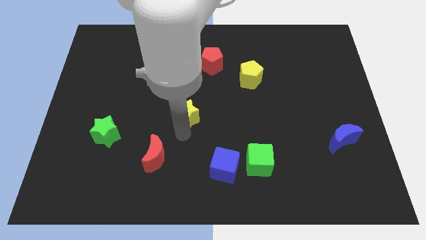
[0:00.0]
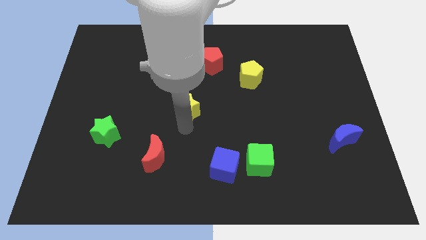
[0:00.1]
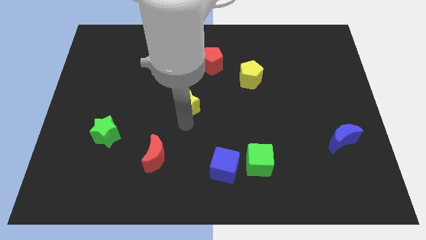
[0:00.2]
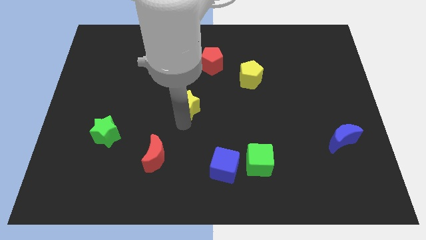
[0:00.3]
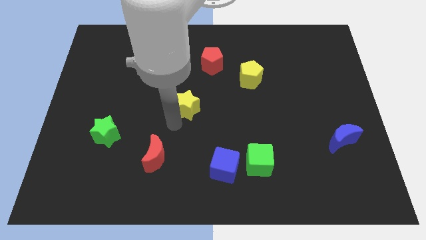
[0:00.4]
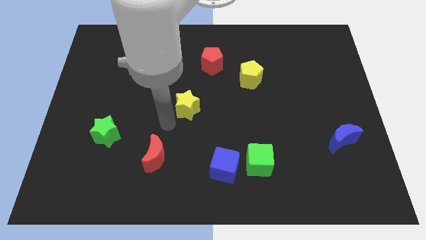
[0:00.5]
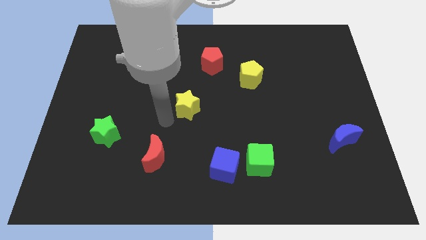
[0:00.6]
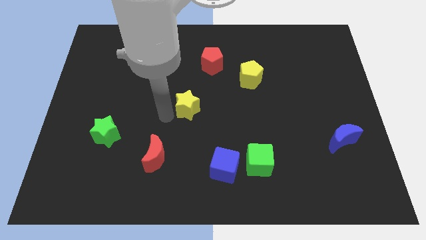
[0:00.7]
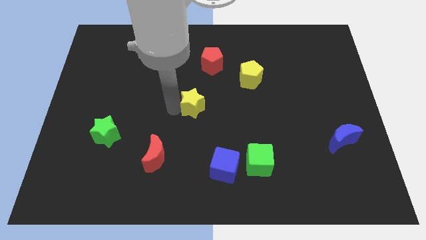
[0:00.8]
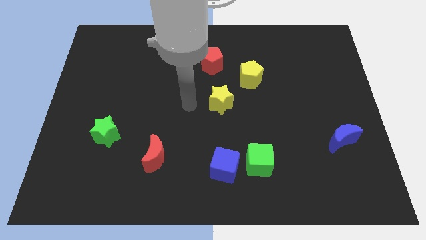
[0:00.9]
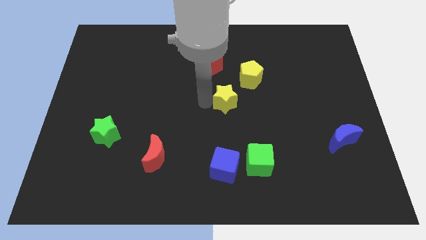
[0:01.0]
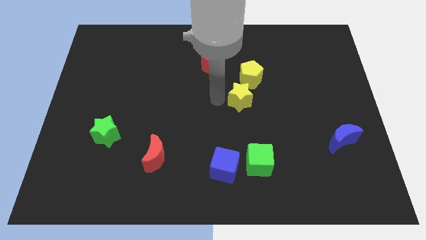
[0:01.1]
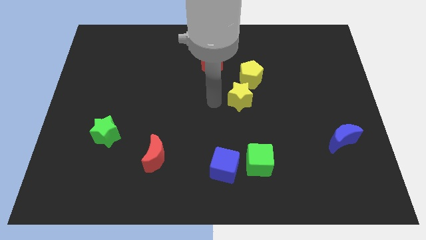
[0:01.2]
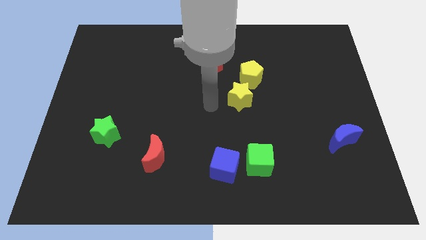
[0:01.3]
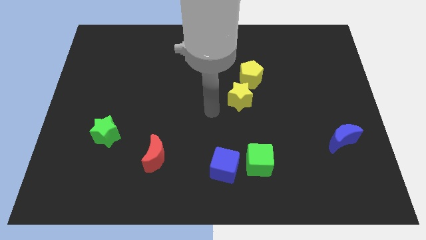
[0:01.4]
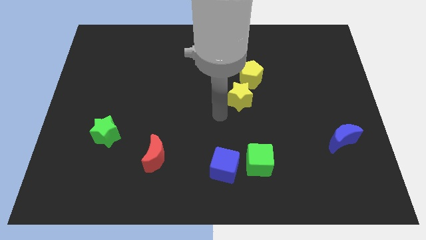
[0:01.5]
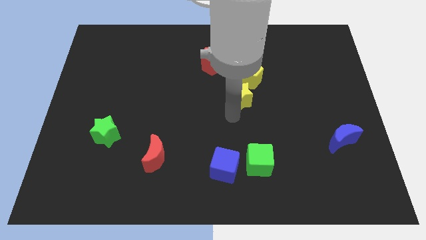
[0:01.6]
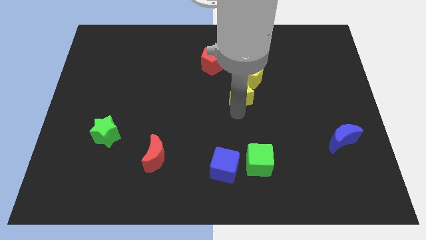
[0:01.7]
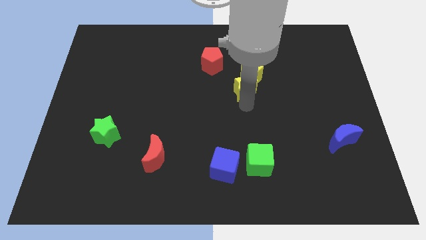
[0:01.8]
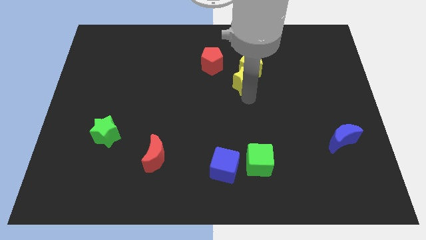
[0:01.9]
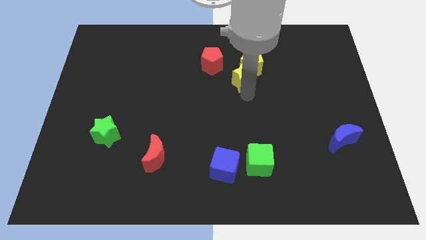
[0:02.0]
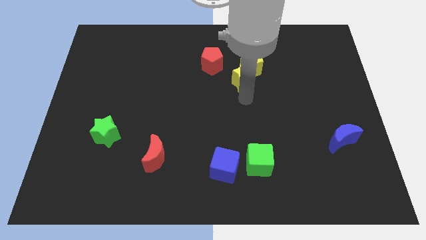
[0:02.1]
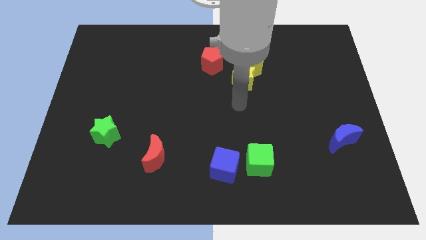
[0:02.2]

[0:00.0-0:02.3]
move the yellow star into the yellow pentagon

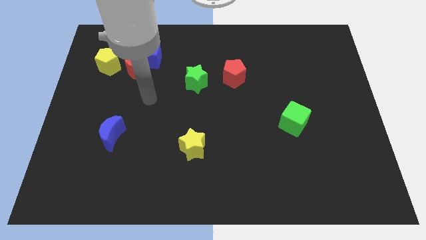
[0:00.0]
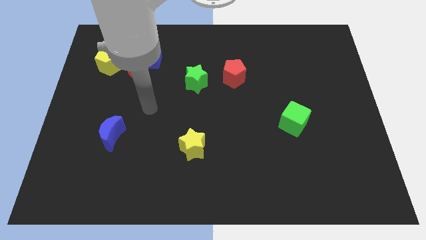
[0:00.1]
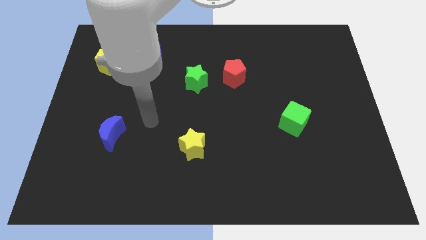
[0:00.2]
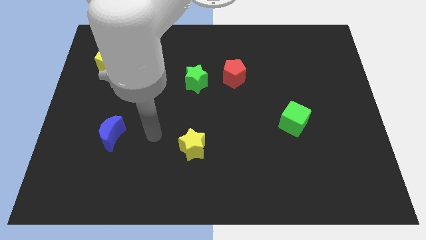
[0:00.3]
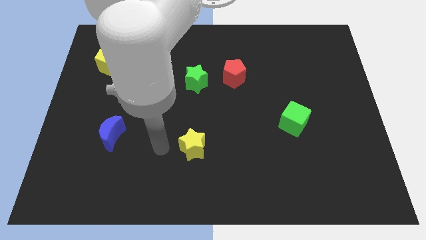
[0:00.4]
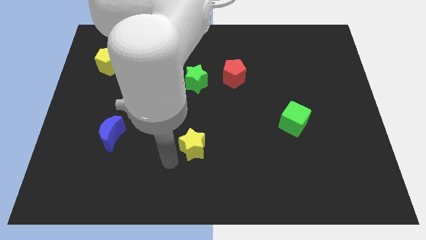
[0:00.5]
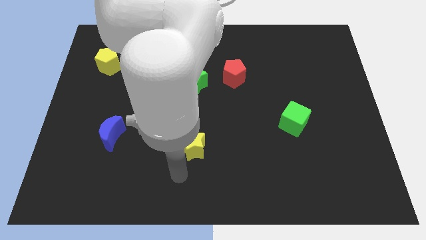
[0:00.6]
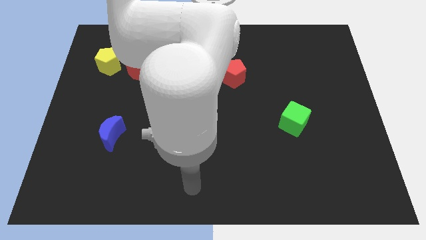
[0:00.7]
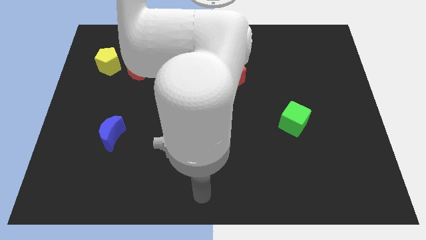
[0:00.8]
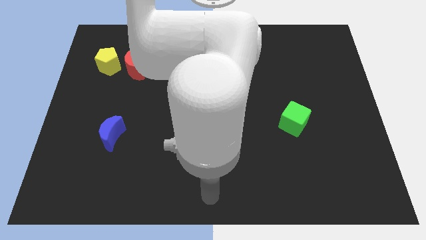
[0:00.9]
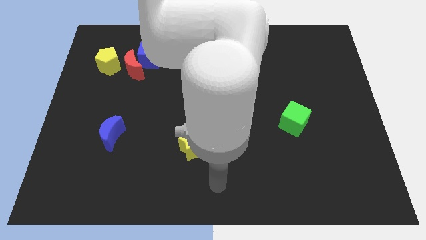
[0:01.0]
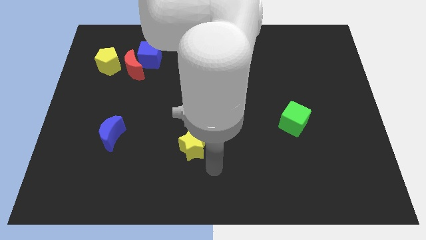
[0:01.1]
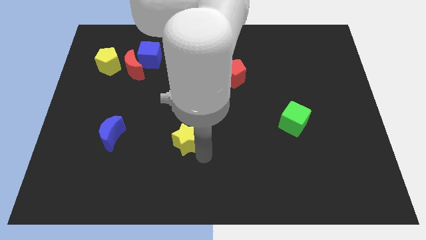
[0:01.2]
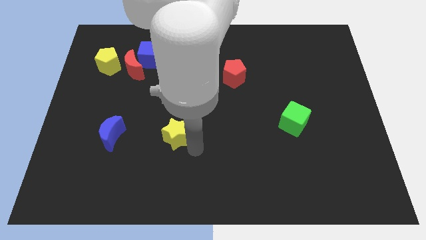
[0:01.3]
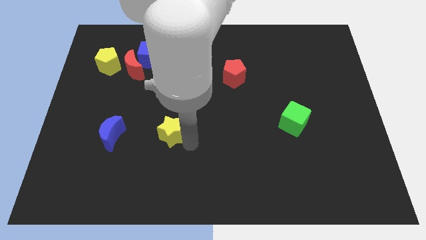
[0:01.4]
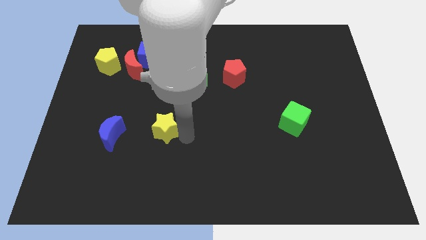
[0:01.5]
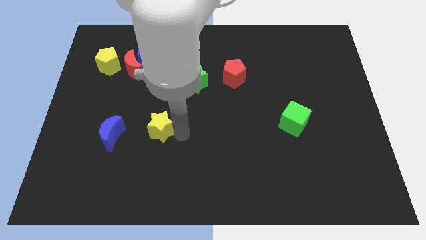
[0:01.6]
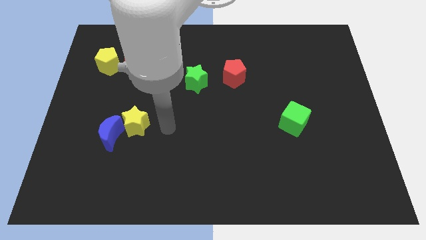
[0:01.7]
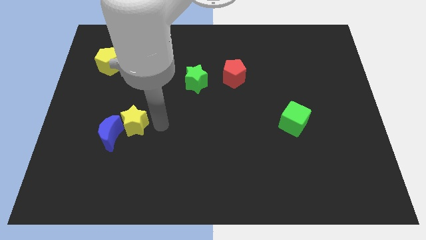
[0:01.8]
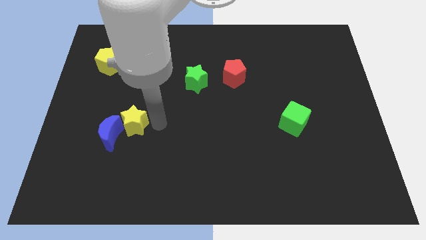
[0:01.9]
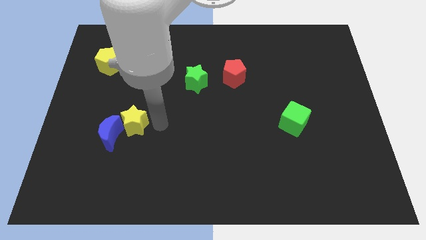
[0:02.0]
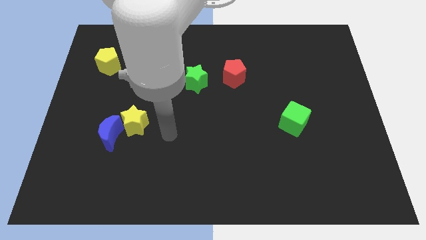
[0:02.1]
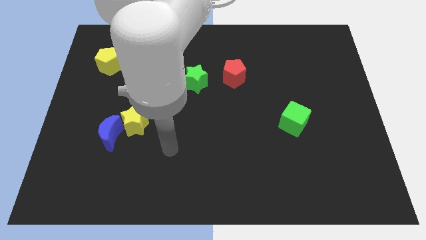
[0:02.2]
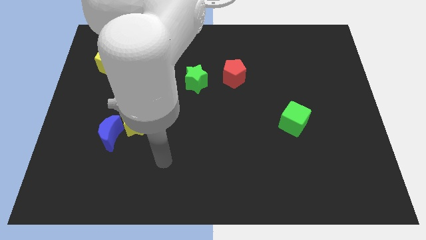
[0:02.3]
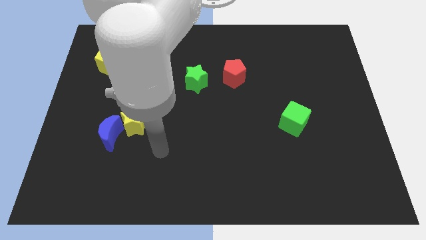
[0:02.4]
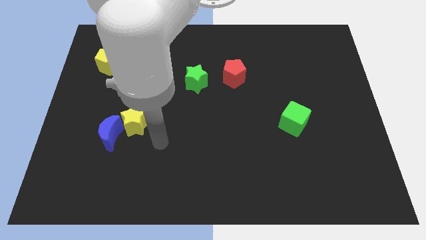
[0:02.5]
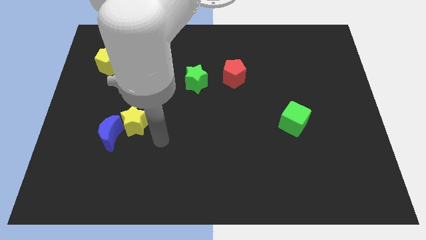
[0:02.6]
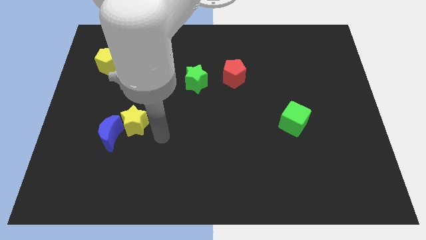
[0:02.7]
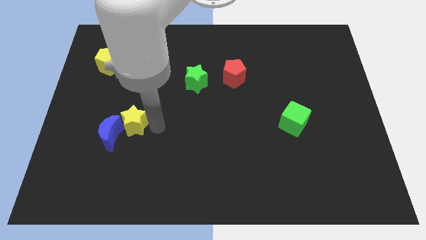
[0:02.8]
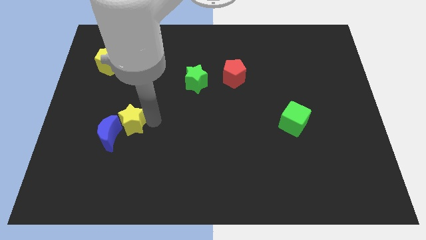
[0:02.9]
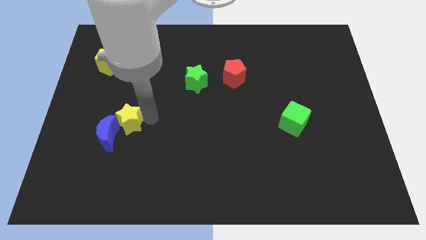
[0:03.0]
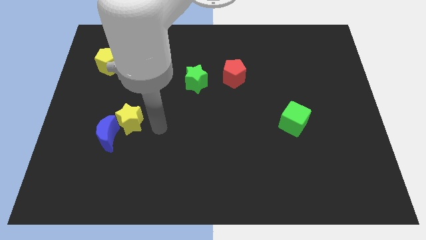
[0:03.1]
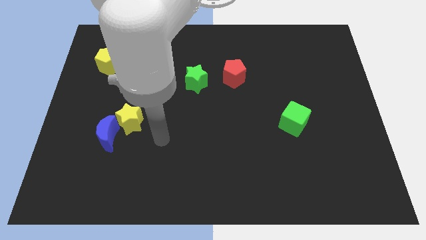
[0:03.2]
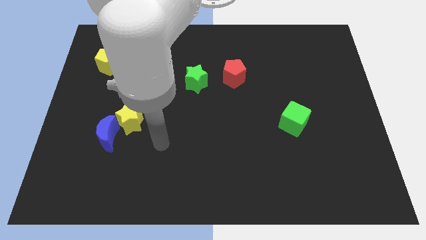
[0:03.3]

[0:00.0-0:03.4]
move the yellow star to the right of blue crescent

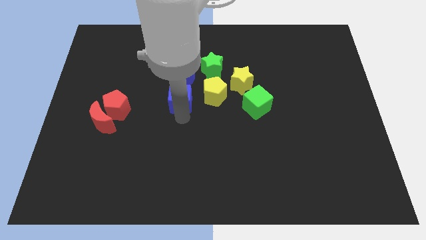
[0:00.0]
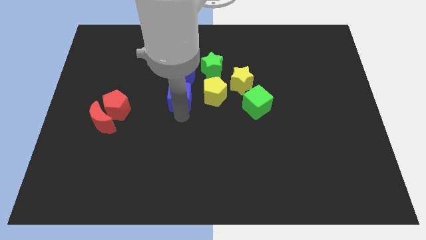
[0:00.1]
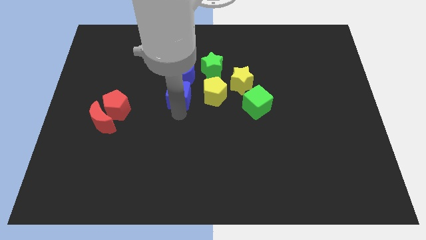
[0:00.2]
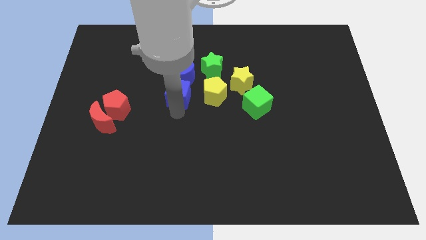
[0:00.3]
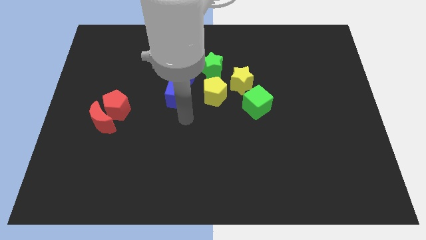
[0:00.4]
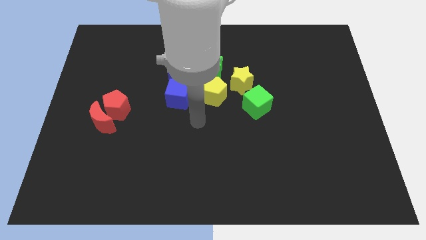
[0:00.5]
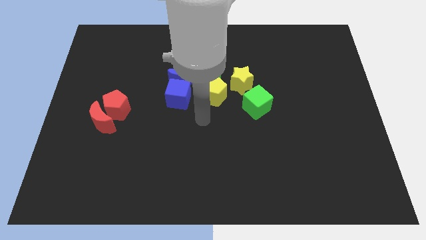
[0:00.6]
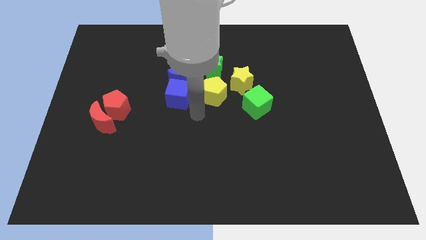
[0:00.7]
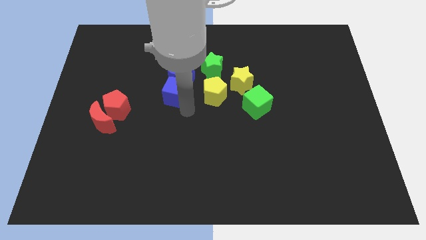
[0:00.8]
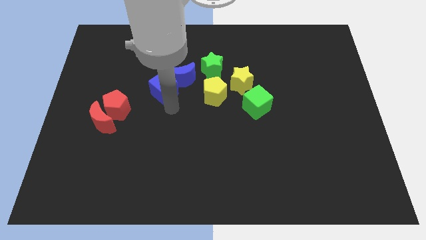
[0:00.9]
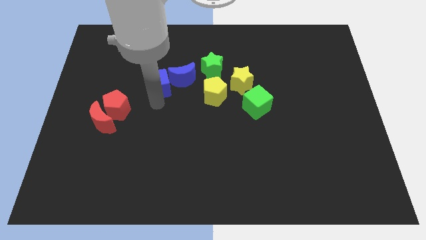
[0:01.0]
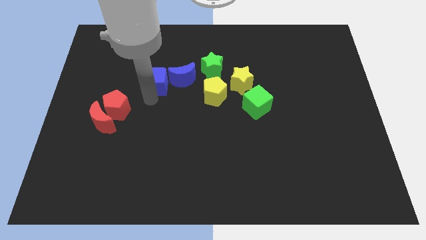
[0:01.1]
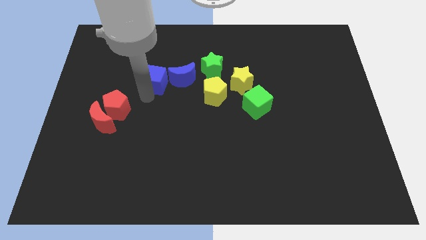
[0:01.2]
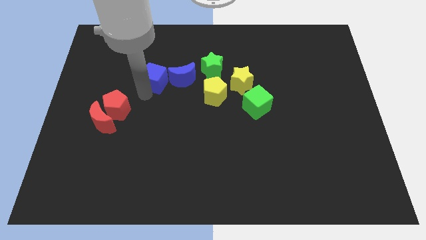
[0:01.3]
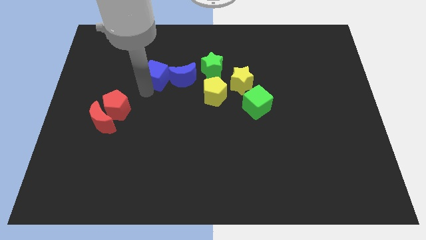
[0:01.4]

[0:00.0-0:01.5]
place blue cube to the left of blue moon

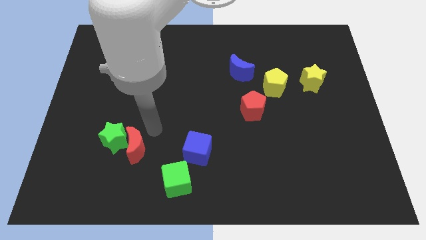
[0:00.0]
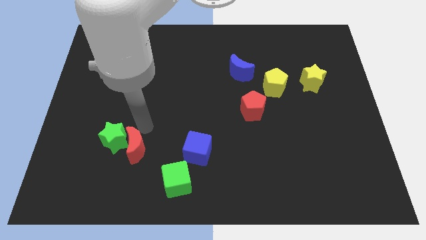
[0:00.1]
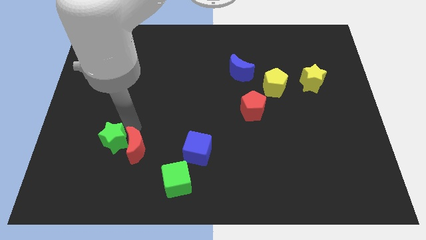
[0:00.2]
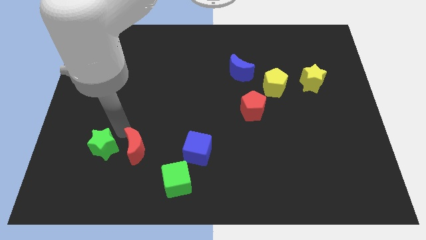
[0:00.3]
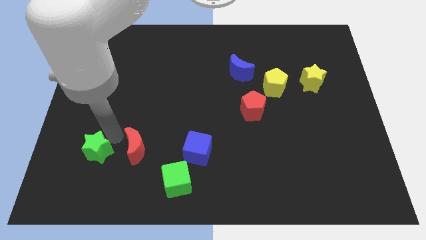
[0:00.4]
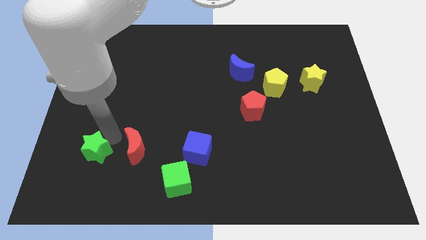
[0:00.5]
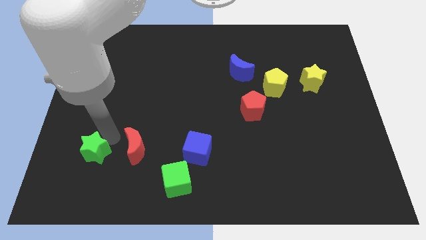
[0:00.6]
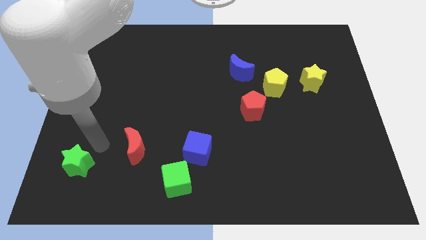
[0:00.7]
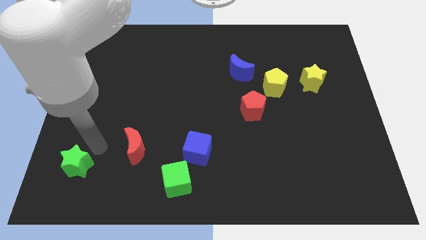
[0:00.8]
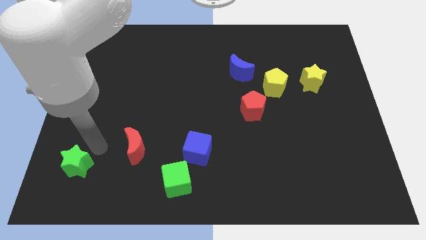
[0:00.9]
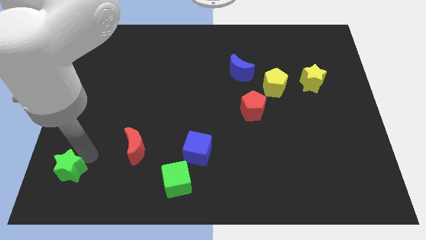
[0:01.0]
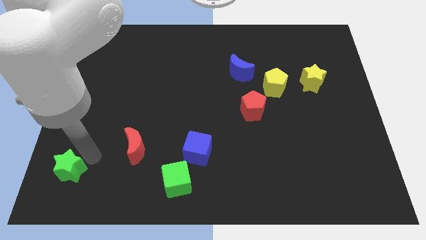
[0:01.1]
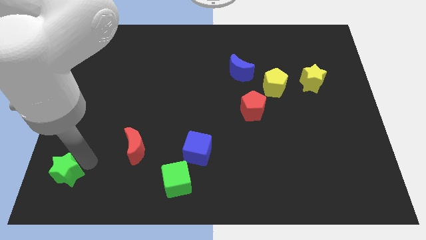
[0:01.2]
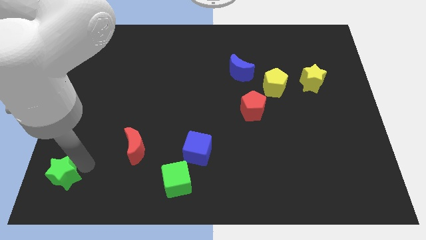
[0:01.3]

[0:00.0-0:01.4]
separate the green star from the red moon

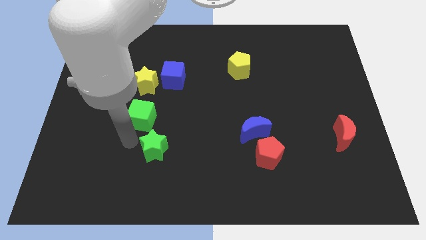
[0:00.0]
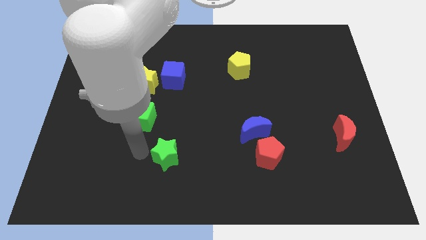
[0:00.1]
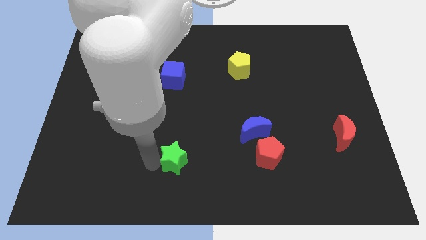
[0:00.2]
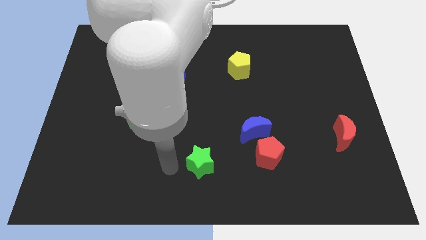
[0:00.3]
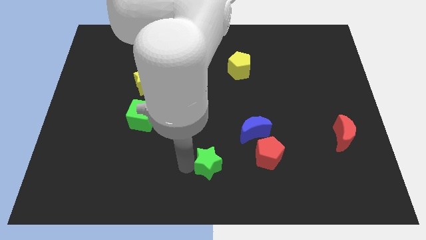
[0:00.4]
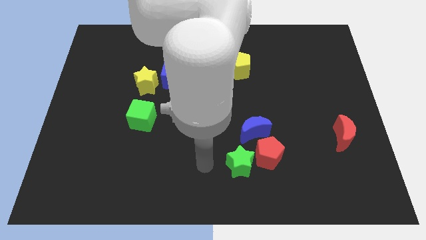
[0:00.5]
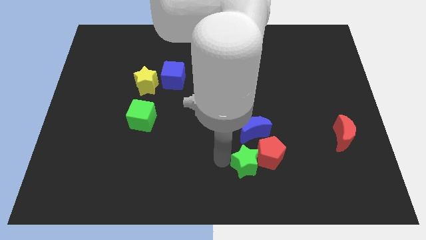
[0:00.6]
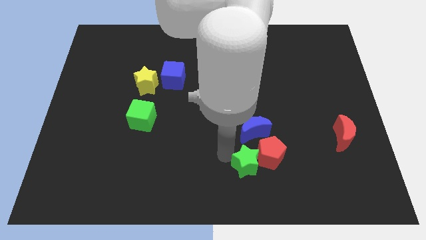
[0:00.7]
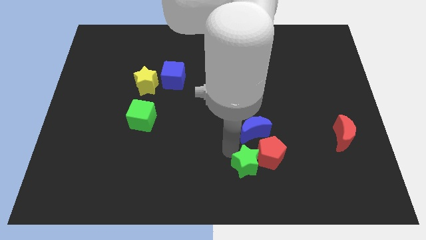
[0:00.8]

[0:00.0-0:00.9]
move the green star in front of the red pentagon
